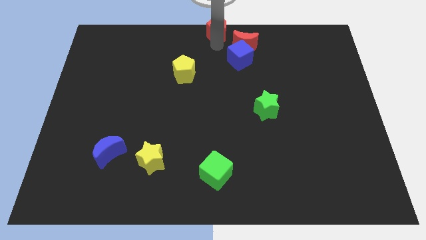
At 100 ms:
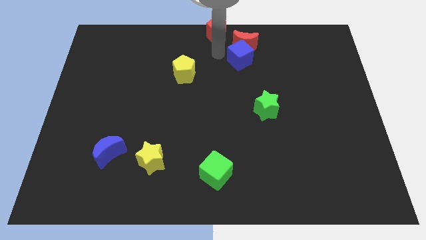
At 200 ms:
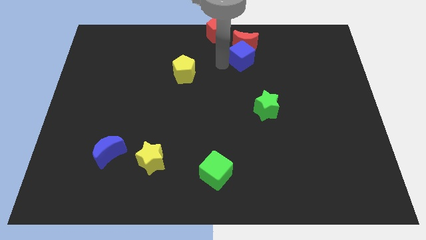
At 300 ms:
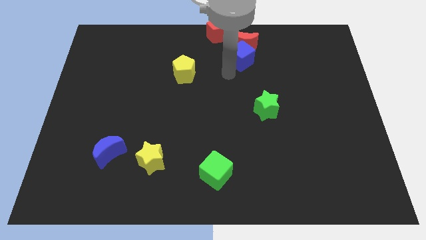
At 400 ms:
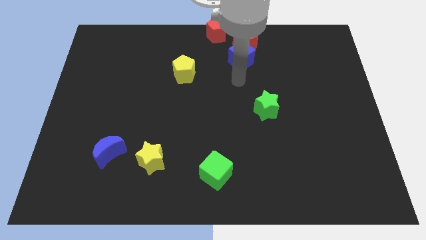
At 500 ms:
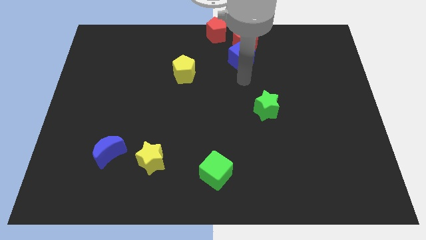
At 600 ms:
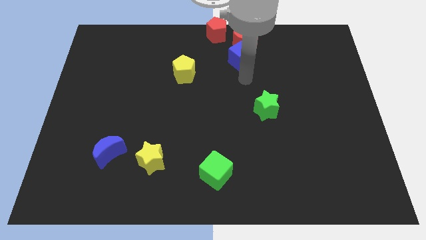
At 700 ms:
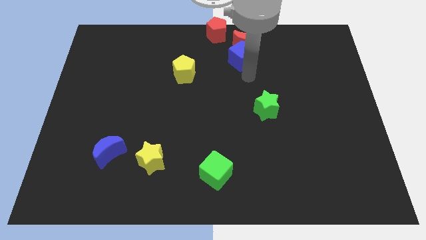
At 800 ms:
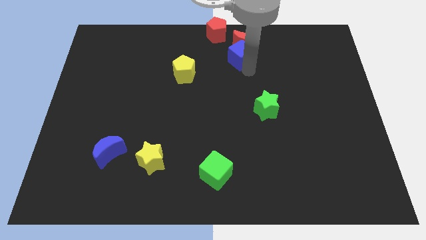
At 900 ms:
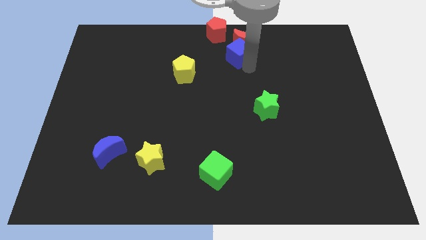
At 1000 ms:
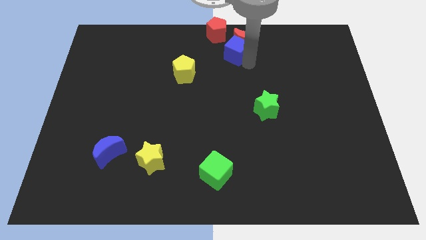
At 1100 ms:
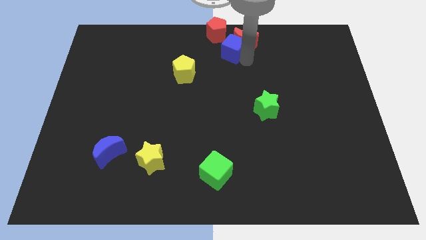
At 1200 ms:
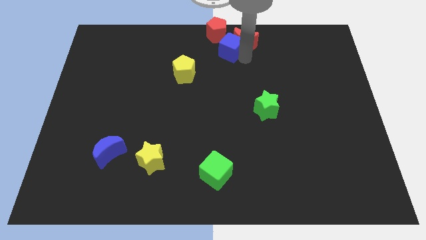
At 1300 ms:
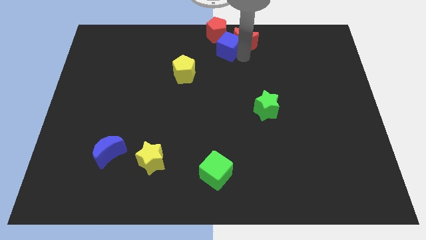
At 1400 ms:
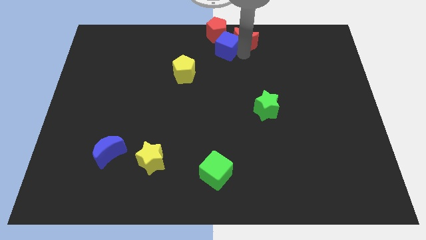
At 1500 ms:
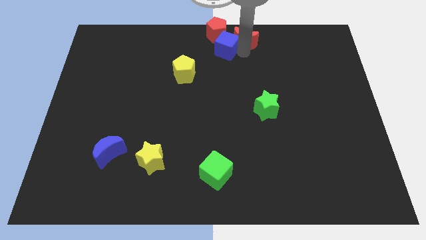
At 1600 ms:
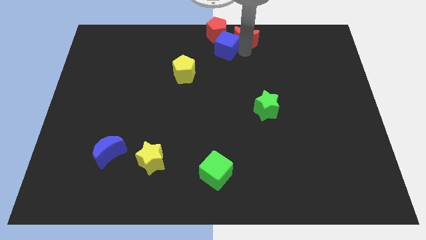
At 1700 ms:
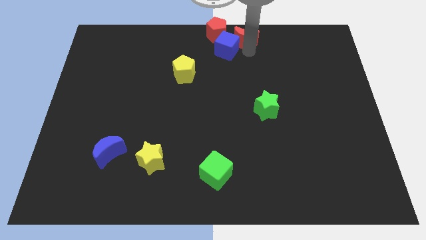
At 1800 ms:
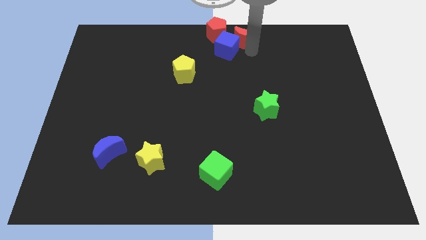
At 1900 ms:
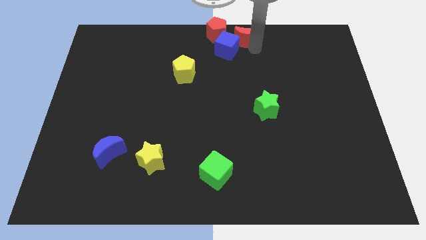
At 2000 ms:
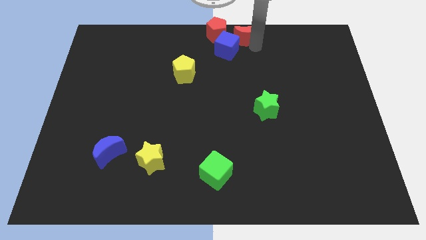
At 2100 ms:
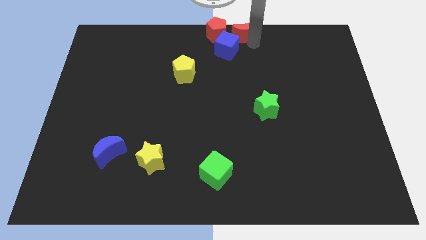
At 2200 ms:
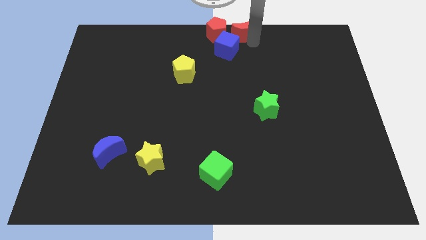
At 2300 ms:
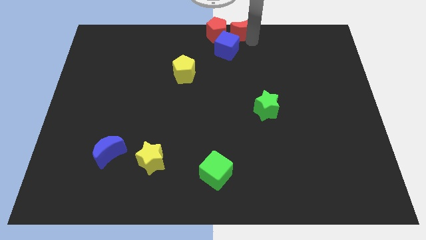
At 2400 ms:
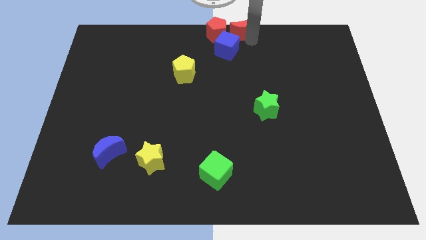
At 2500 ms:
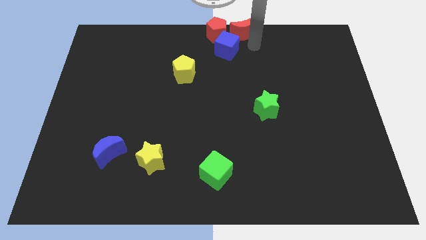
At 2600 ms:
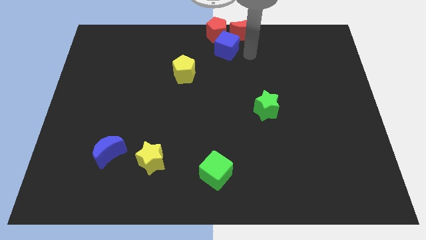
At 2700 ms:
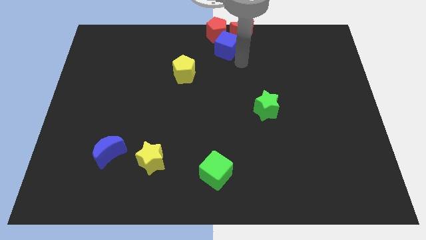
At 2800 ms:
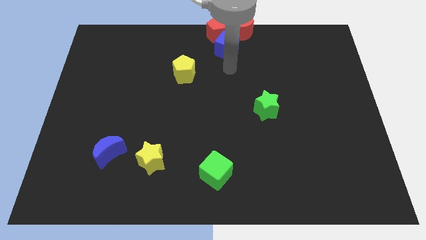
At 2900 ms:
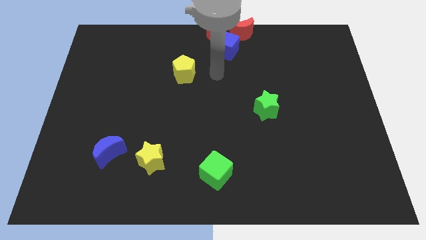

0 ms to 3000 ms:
move the red moon to the right of the red pentagon

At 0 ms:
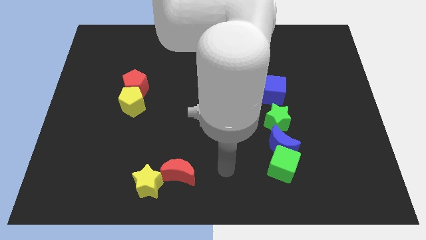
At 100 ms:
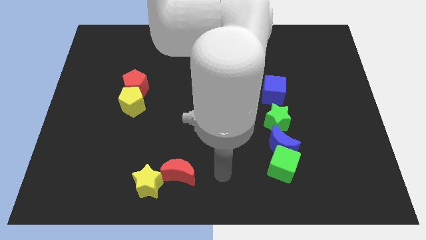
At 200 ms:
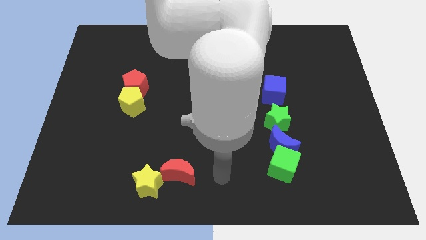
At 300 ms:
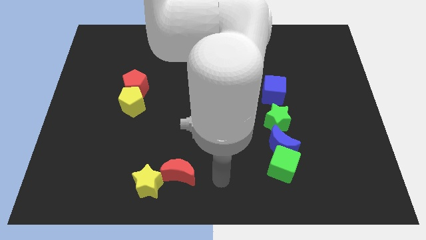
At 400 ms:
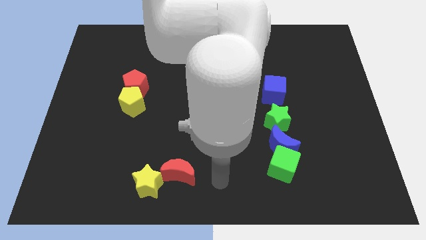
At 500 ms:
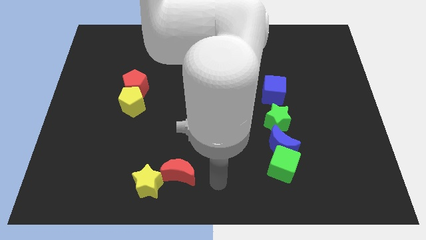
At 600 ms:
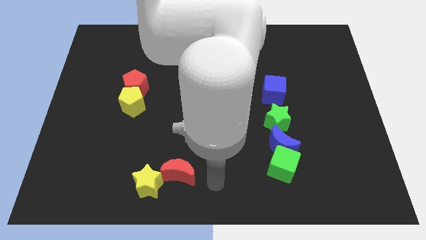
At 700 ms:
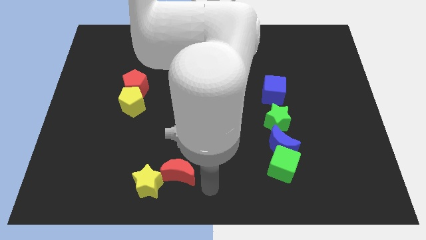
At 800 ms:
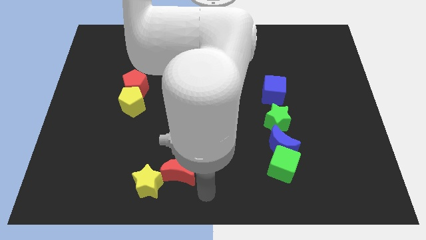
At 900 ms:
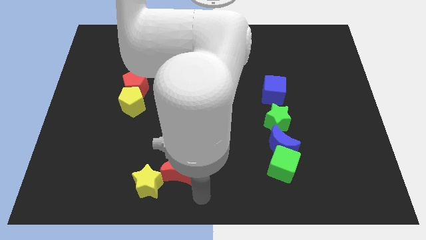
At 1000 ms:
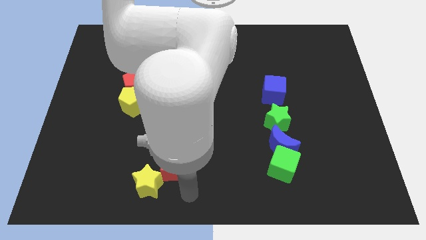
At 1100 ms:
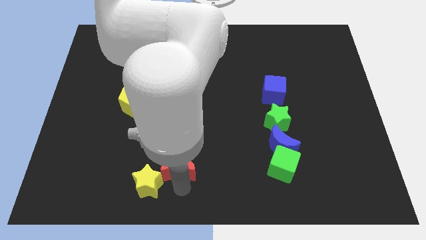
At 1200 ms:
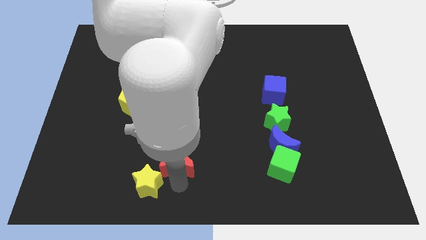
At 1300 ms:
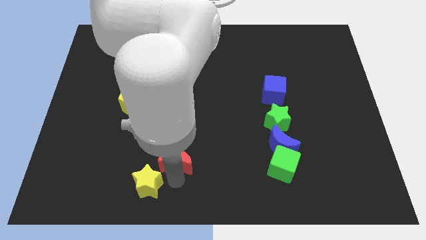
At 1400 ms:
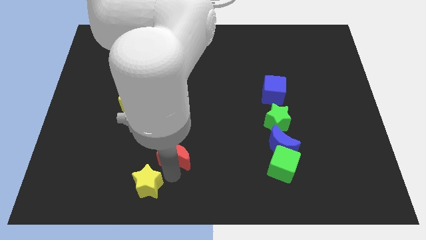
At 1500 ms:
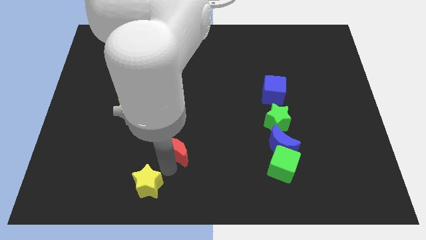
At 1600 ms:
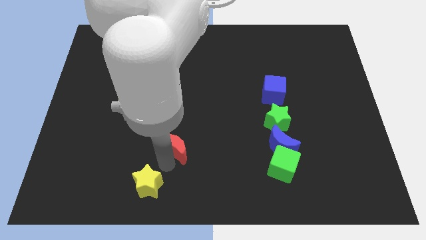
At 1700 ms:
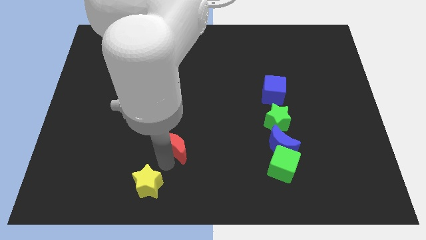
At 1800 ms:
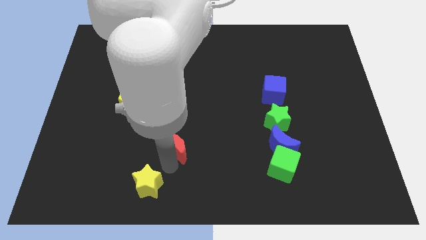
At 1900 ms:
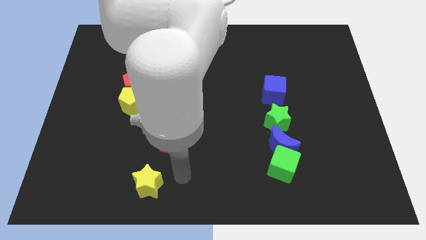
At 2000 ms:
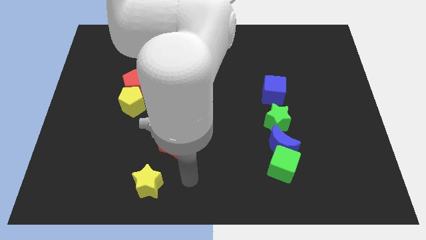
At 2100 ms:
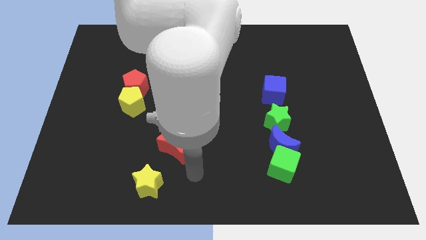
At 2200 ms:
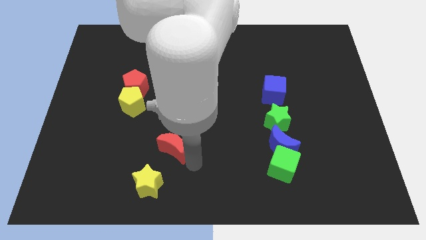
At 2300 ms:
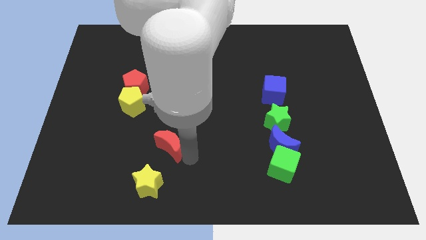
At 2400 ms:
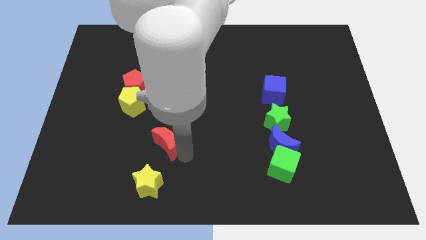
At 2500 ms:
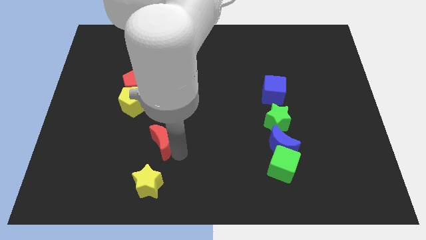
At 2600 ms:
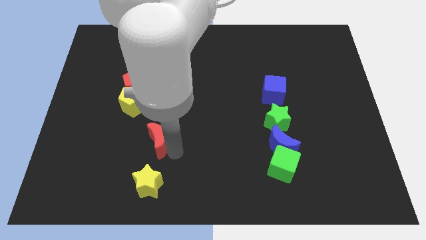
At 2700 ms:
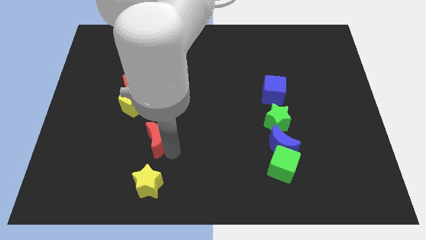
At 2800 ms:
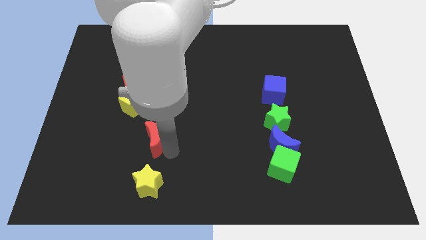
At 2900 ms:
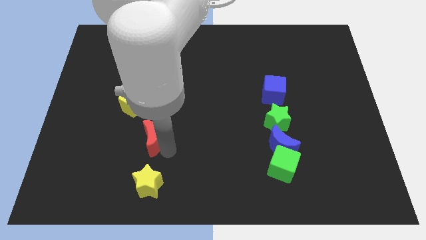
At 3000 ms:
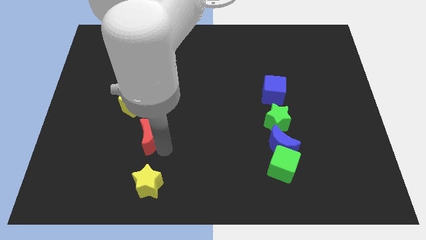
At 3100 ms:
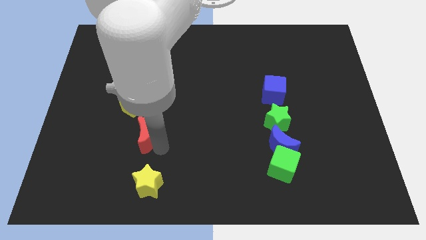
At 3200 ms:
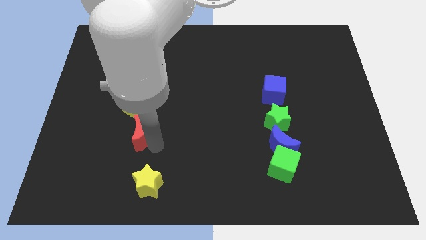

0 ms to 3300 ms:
move red moon away from the yellow star

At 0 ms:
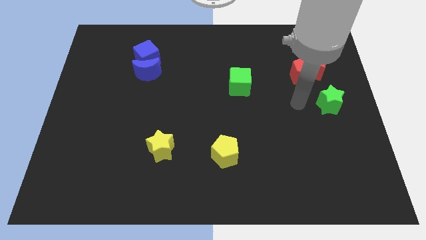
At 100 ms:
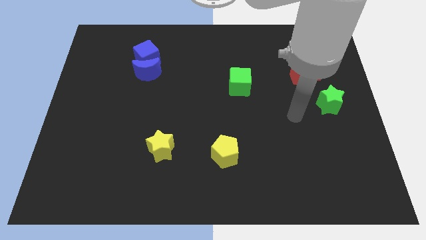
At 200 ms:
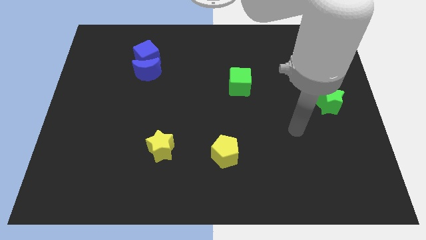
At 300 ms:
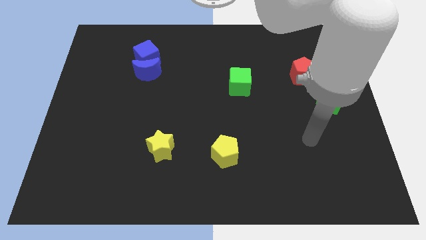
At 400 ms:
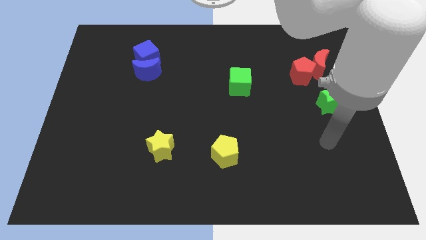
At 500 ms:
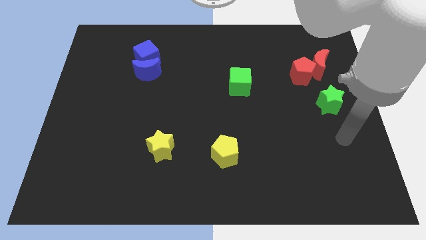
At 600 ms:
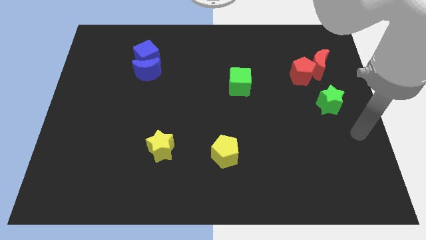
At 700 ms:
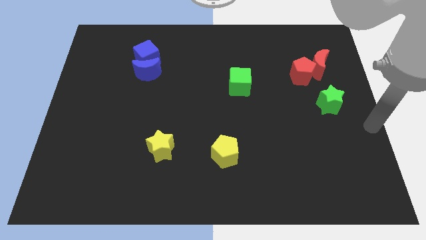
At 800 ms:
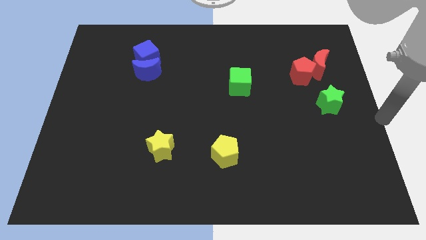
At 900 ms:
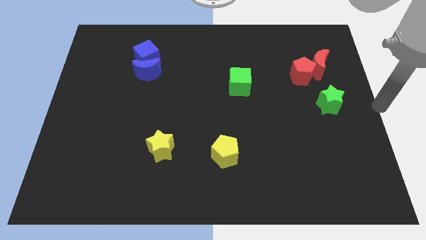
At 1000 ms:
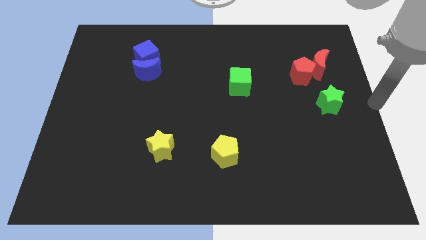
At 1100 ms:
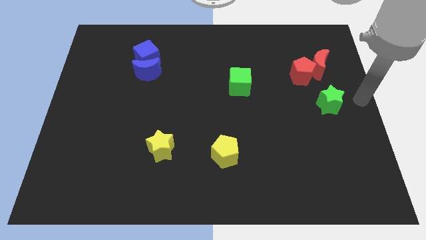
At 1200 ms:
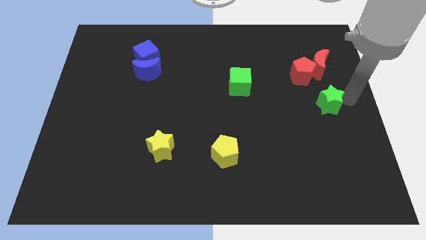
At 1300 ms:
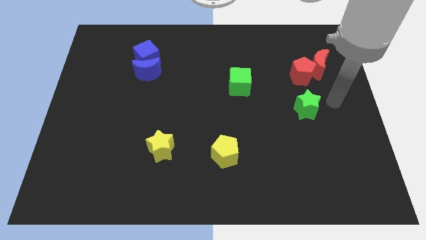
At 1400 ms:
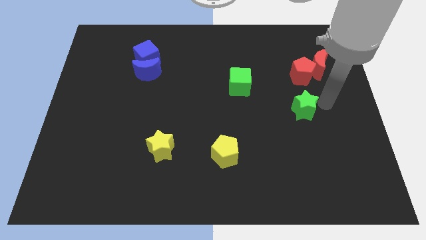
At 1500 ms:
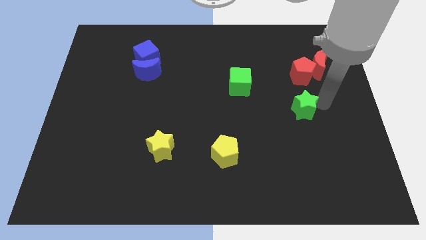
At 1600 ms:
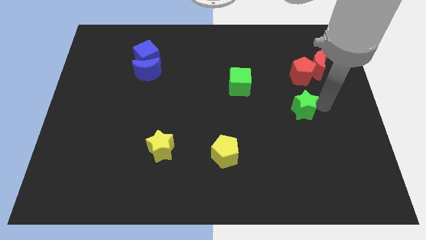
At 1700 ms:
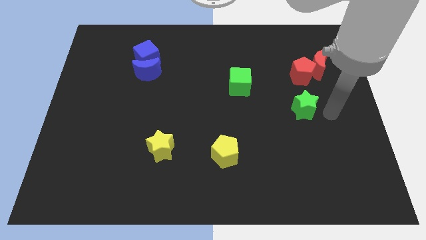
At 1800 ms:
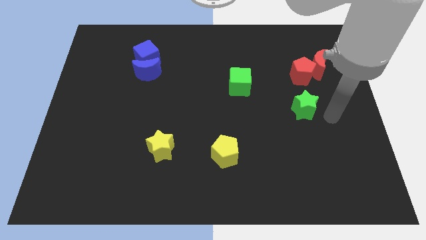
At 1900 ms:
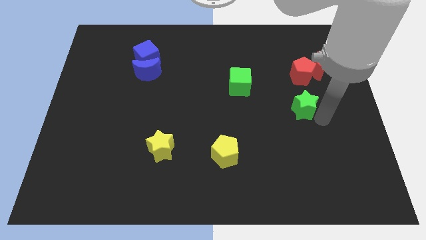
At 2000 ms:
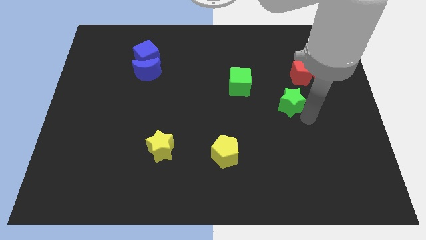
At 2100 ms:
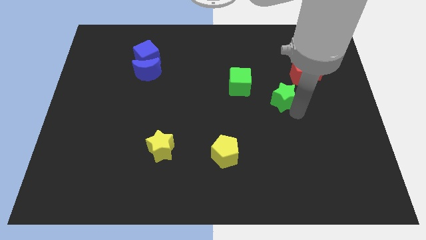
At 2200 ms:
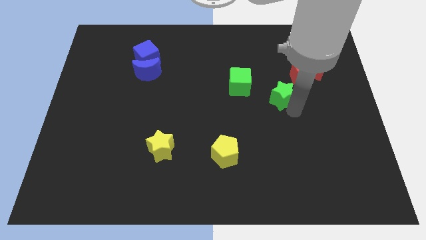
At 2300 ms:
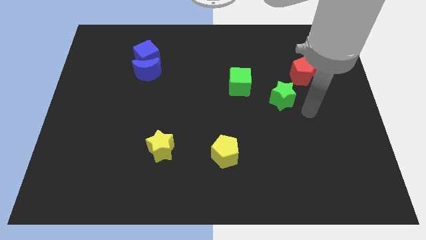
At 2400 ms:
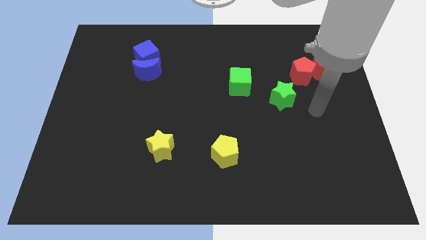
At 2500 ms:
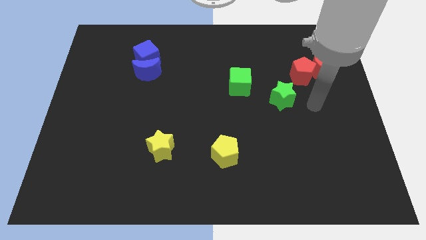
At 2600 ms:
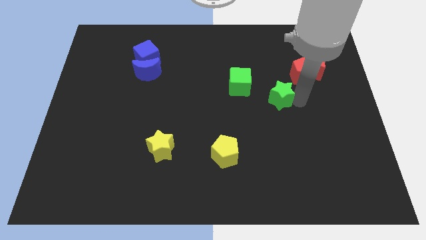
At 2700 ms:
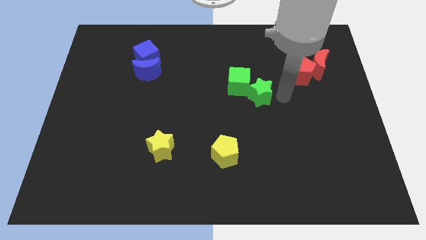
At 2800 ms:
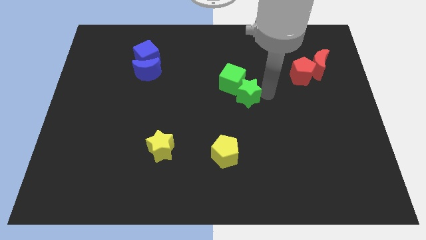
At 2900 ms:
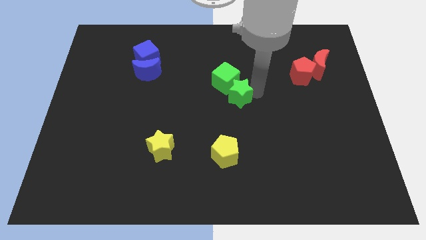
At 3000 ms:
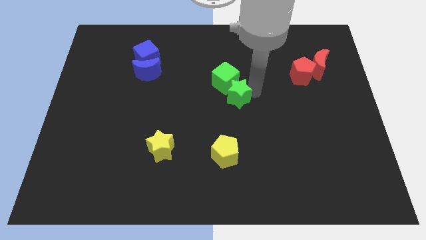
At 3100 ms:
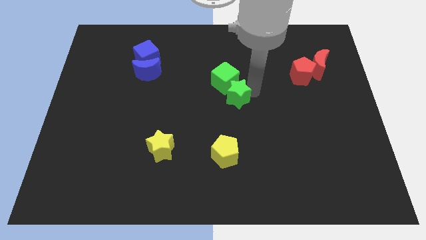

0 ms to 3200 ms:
push the green star into the green cube
